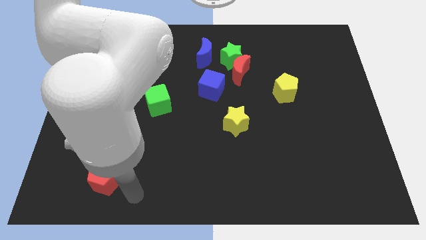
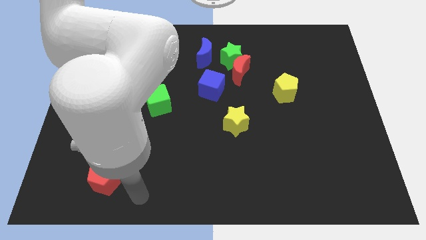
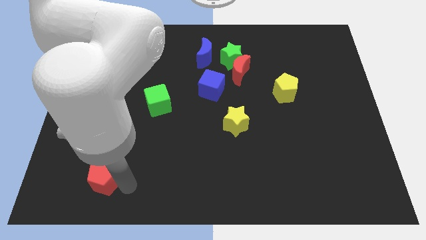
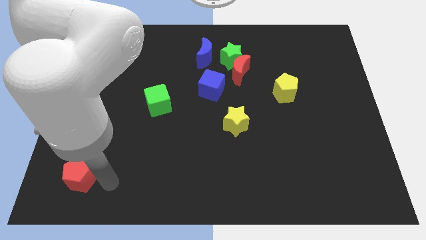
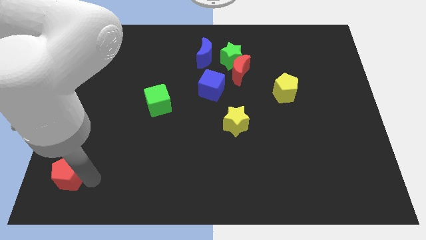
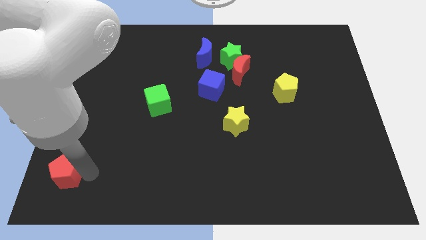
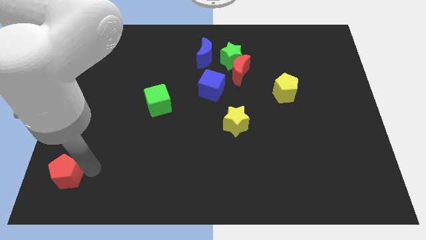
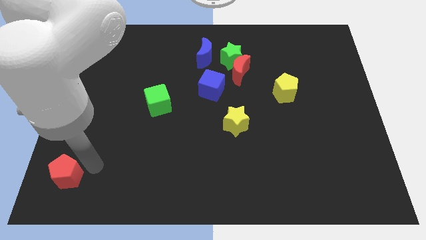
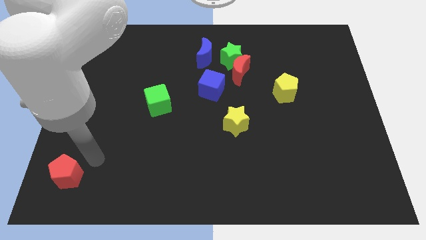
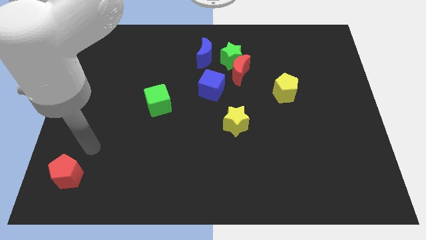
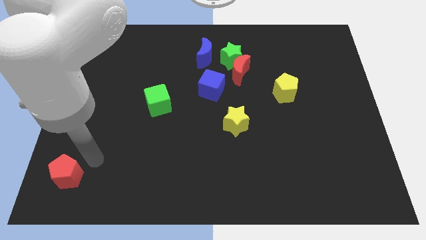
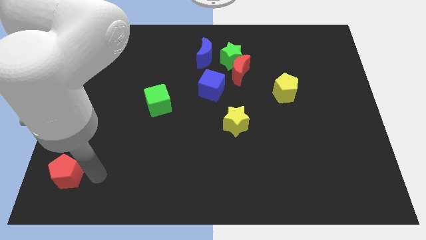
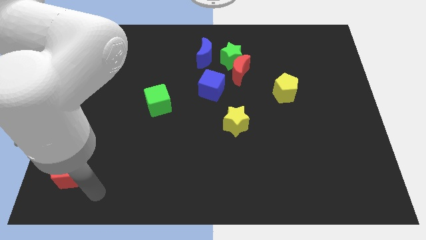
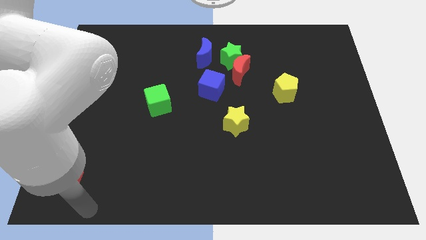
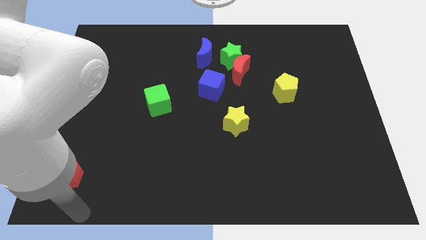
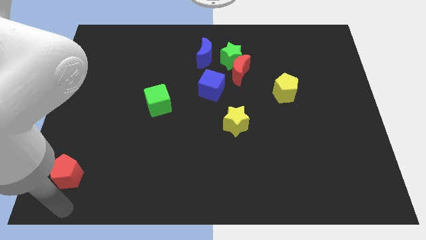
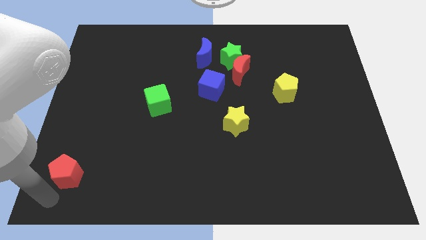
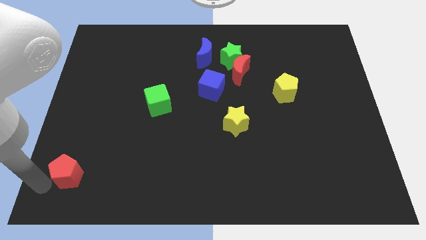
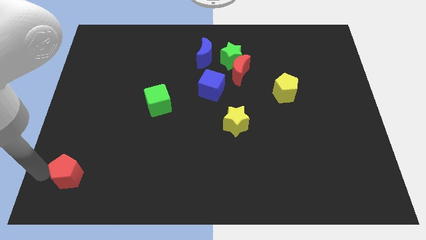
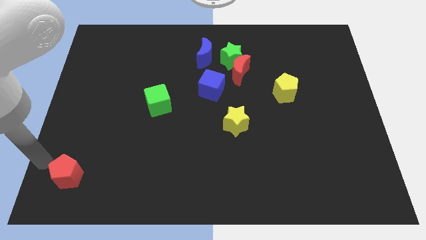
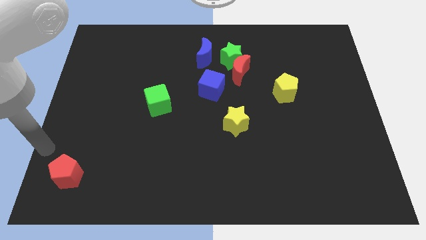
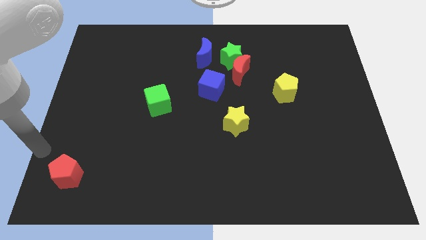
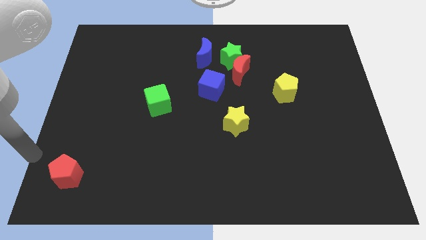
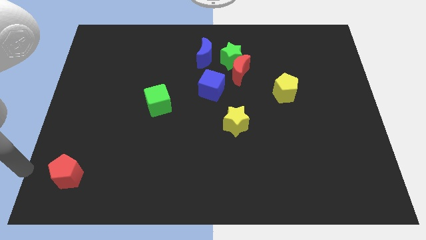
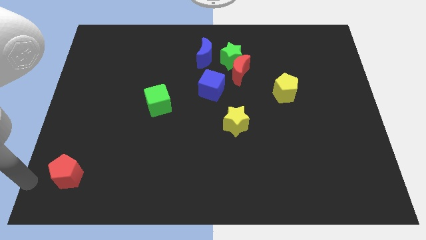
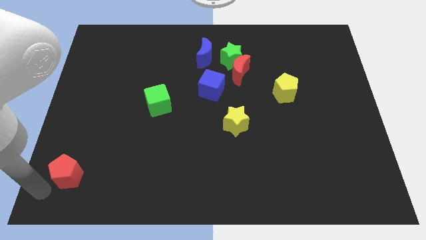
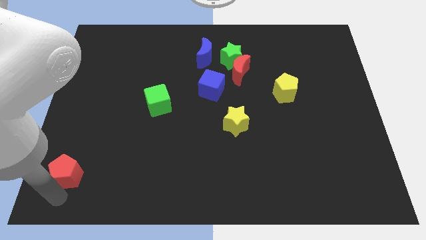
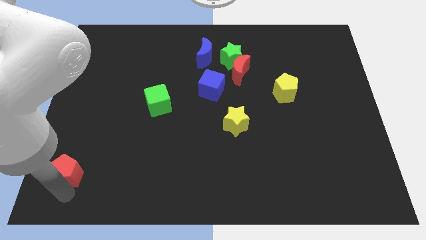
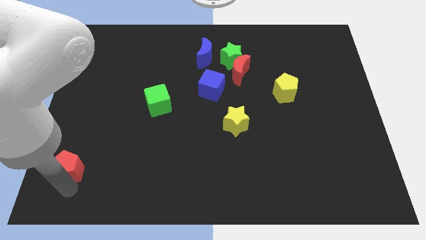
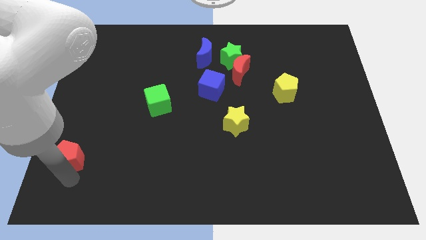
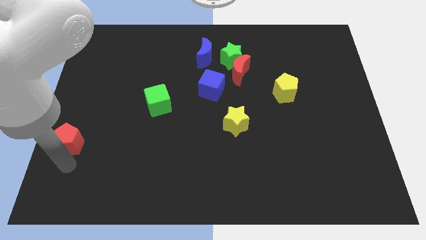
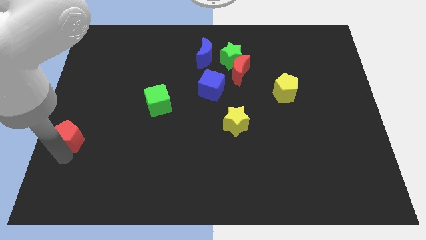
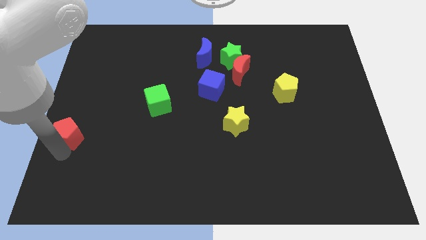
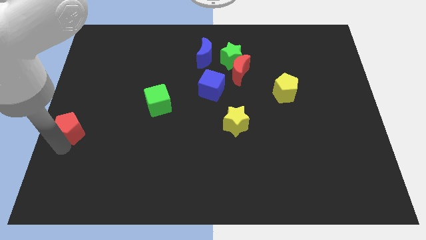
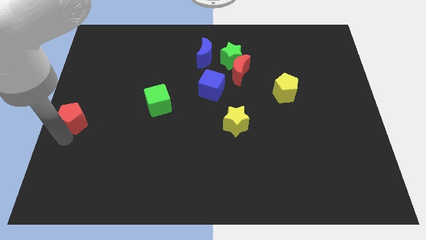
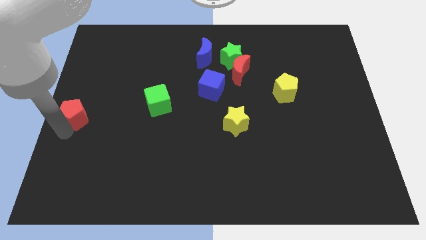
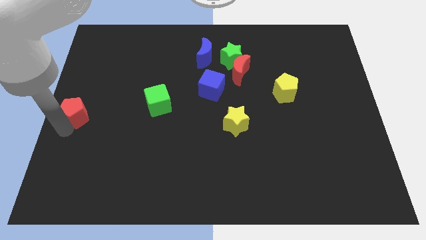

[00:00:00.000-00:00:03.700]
move the red pentagon towards the green cube

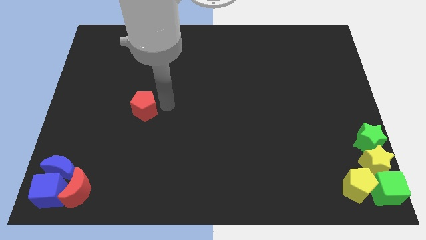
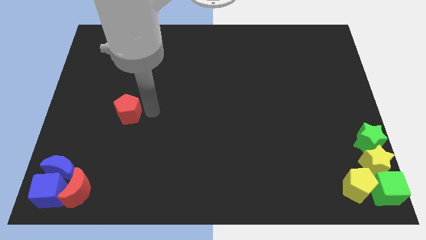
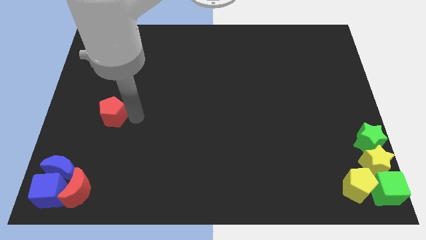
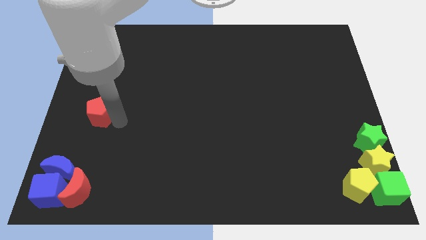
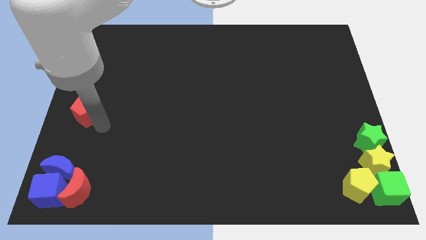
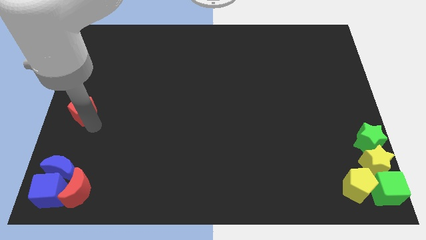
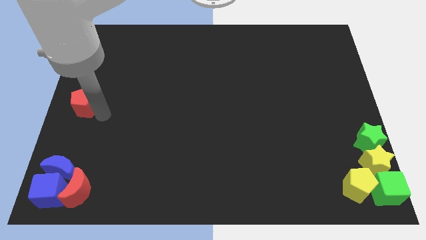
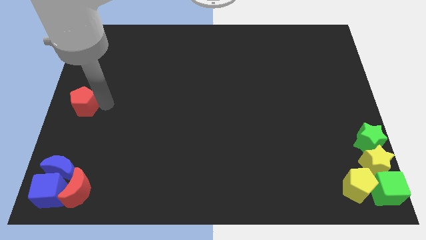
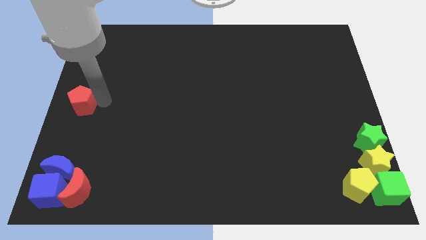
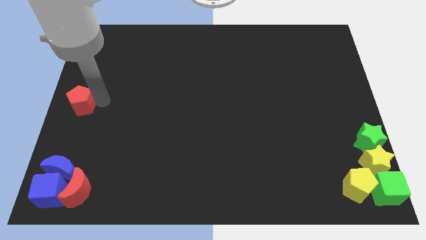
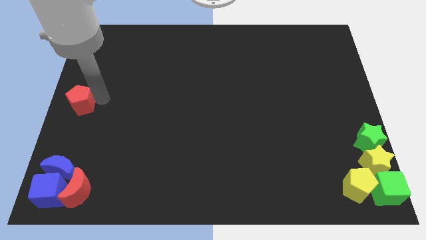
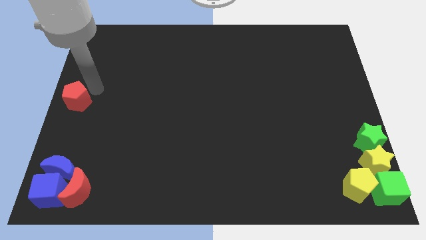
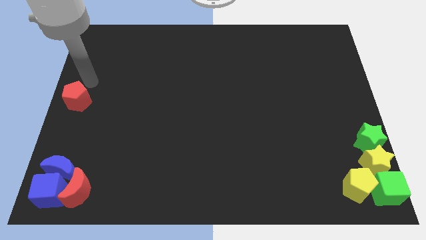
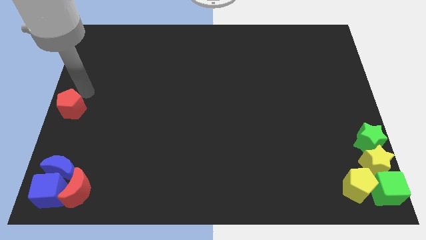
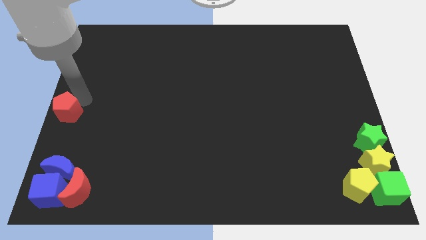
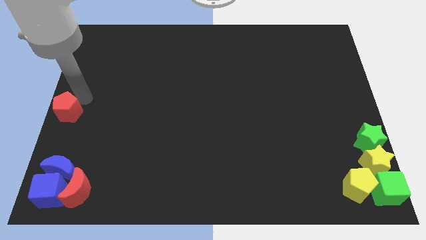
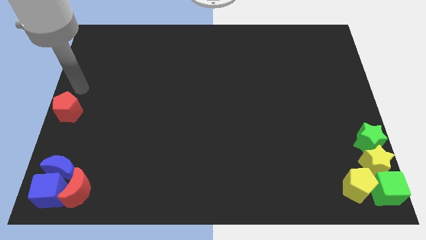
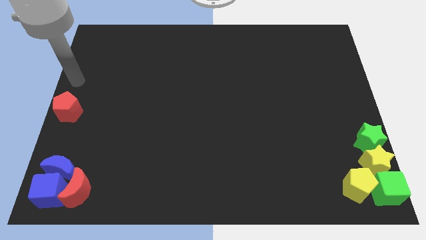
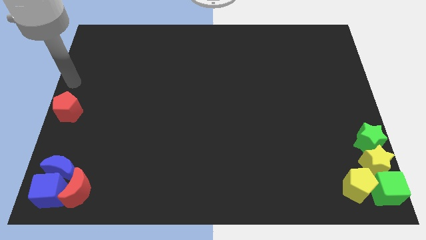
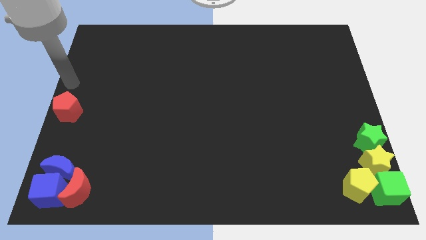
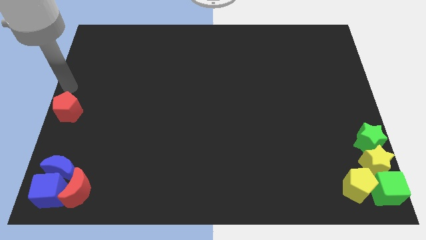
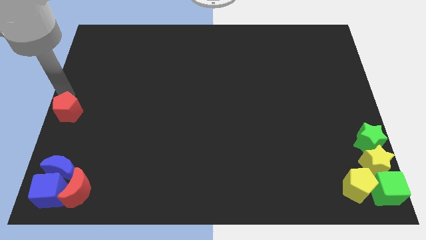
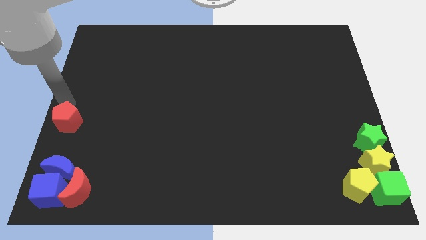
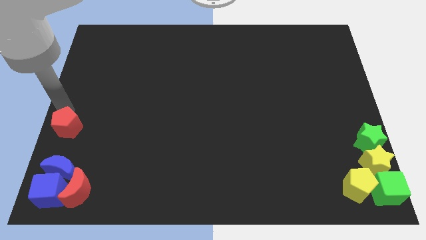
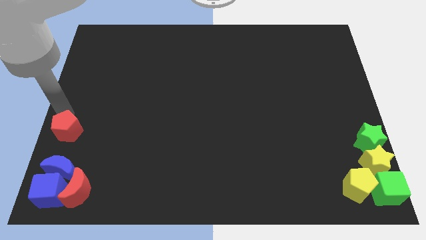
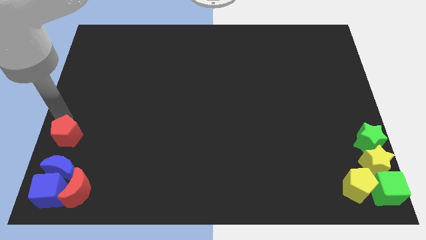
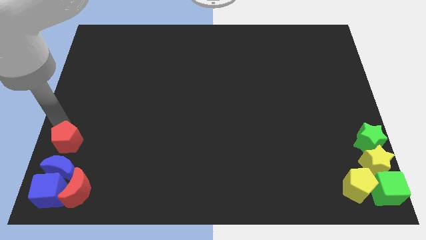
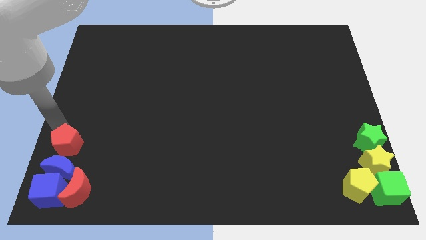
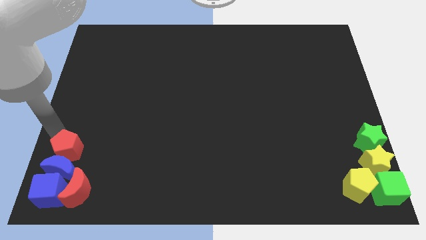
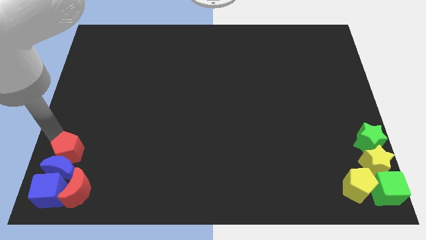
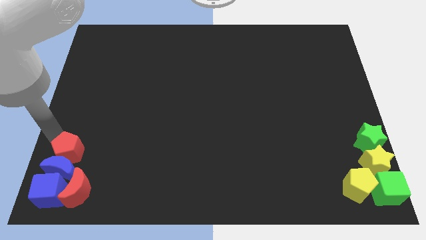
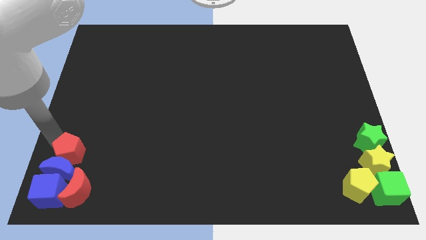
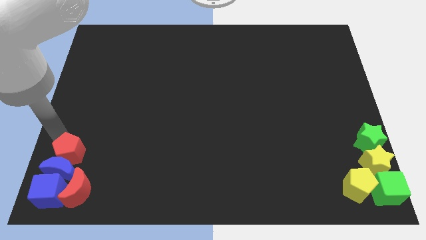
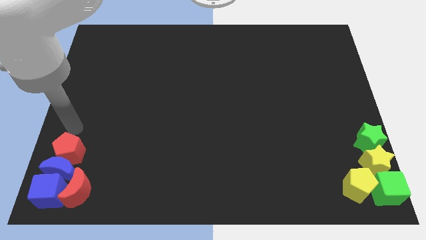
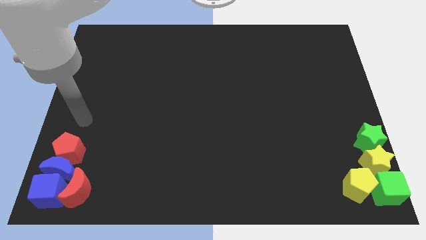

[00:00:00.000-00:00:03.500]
push the red pentagon into the blue crescent

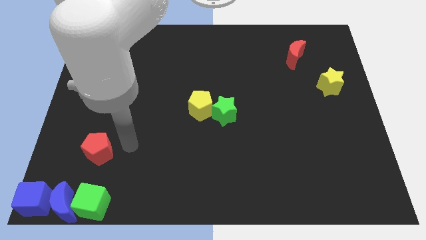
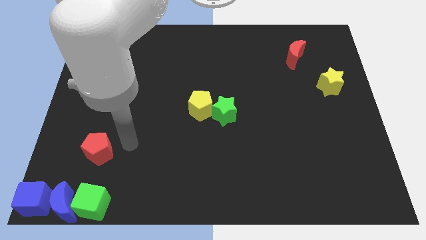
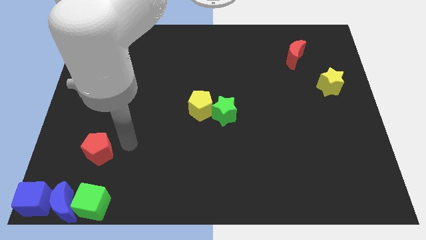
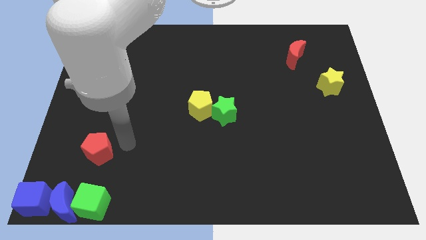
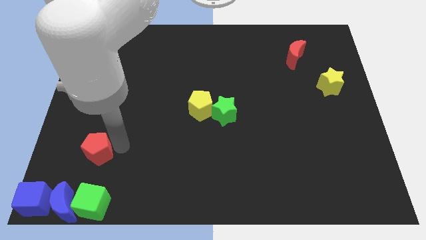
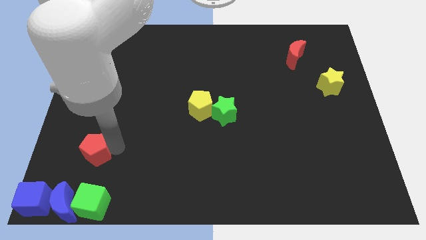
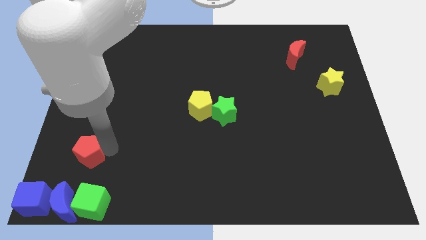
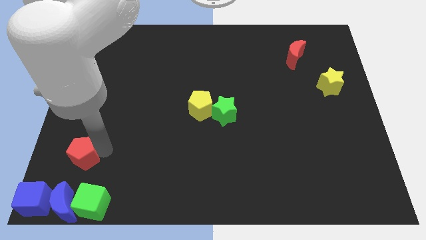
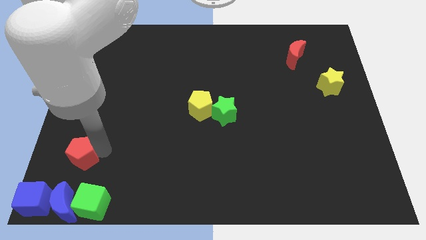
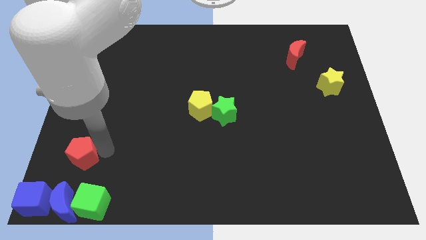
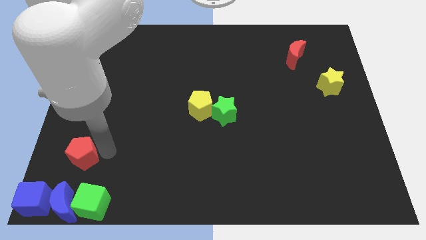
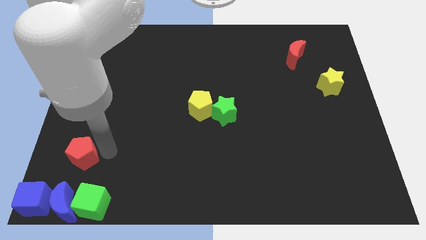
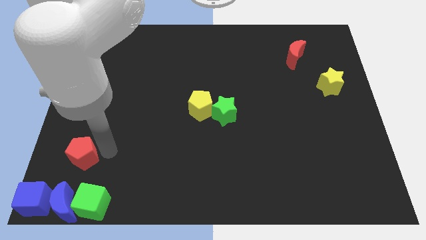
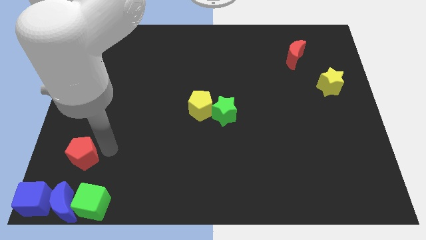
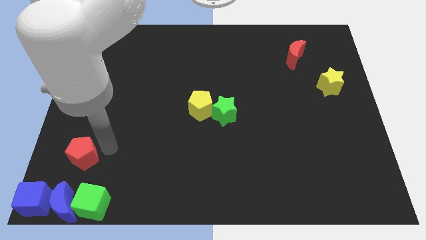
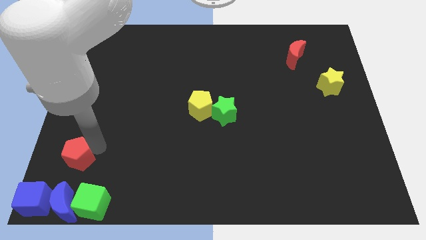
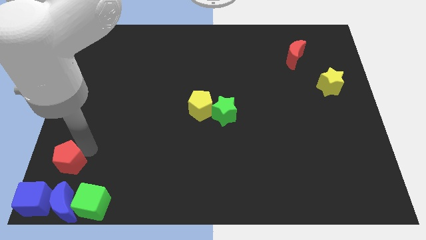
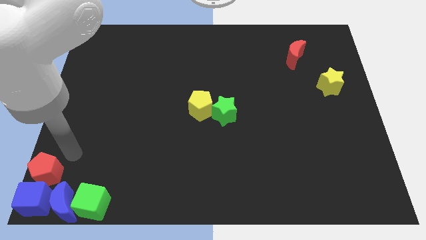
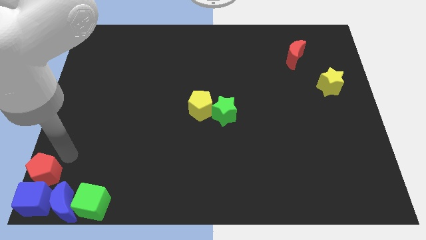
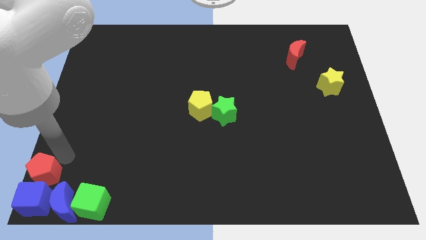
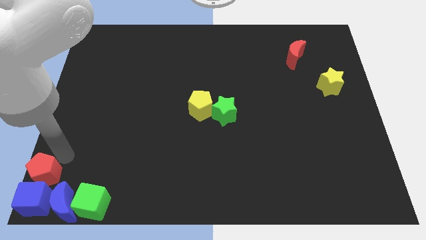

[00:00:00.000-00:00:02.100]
bring the red pentagon at the top side of the blue cube
